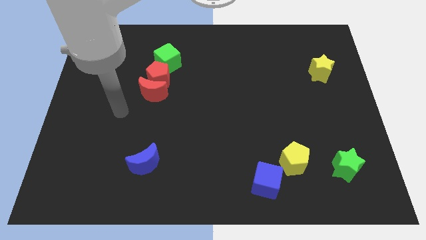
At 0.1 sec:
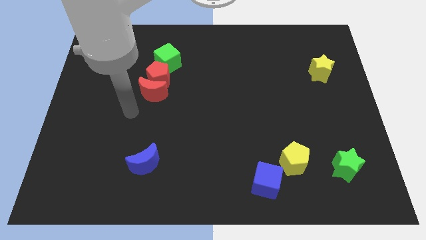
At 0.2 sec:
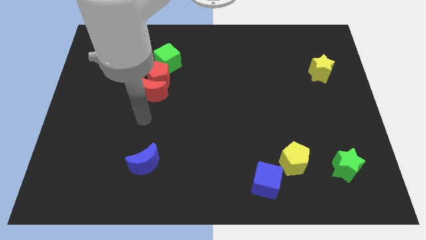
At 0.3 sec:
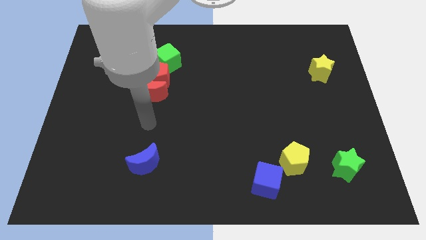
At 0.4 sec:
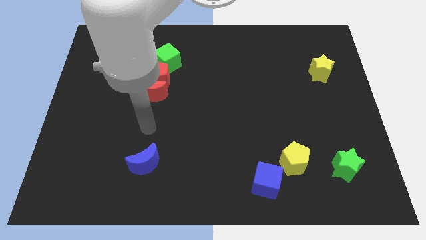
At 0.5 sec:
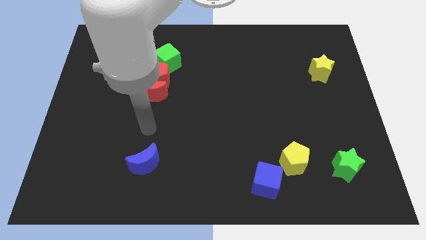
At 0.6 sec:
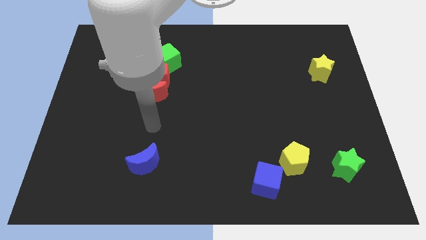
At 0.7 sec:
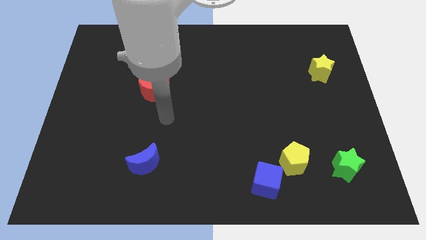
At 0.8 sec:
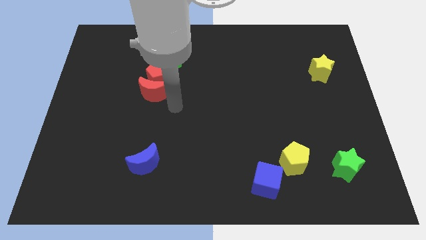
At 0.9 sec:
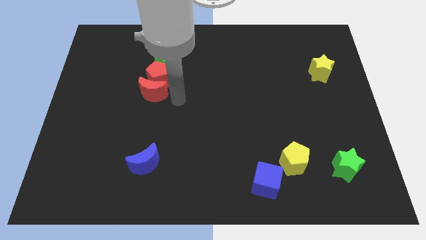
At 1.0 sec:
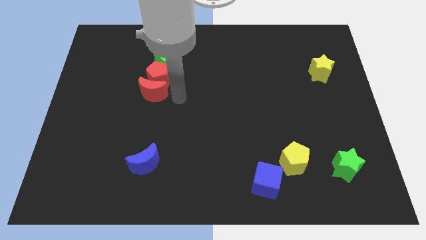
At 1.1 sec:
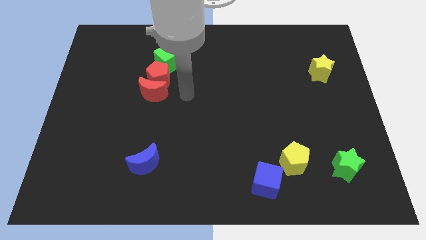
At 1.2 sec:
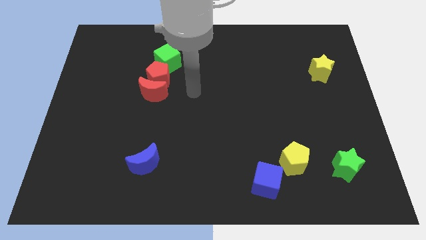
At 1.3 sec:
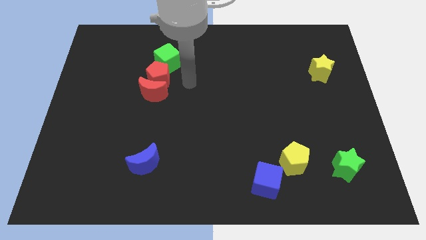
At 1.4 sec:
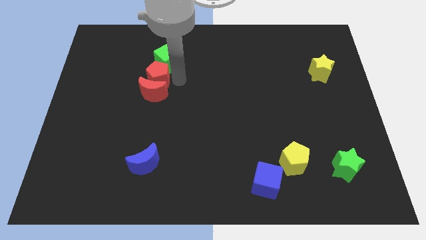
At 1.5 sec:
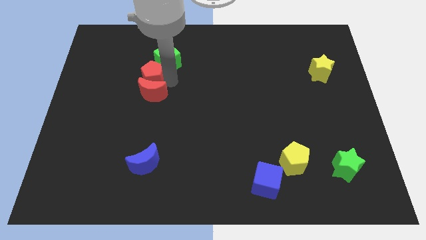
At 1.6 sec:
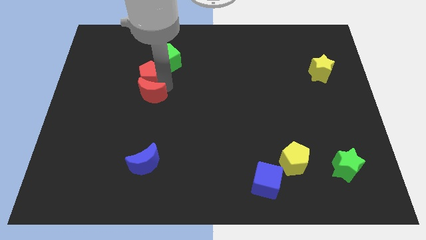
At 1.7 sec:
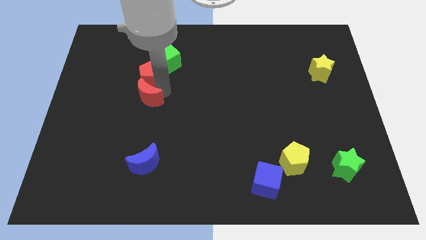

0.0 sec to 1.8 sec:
touch the red pentagon

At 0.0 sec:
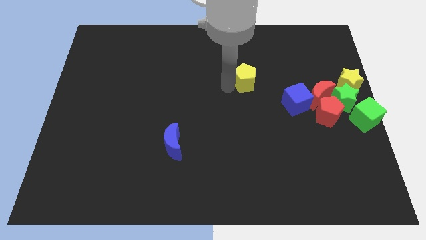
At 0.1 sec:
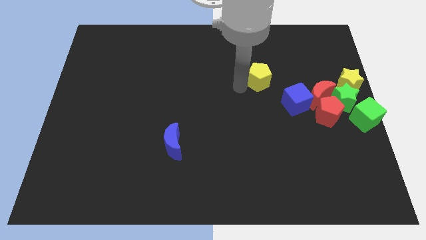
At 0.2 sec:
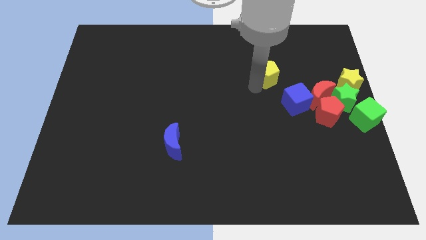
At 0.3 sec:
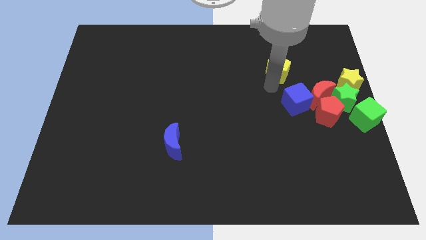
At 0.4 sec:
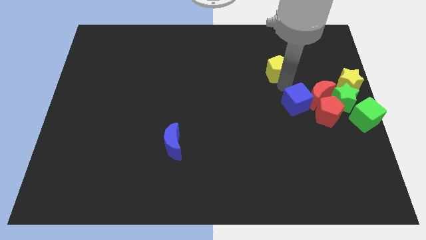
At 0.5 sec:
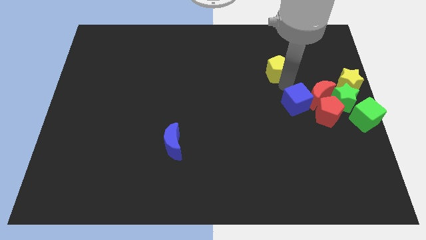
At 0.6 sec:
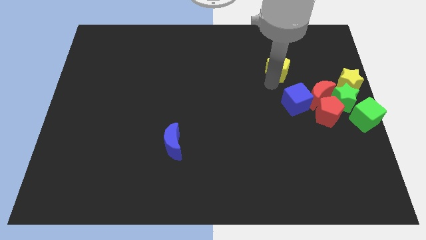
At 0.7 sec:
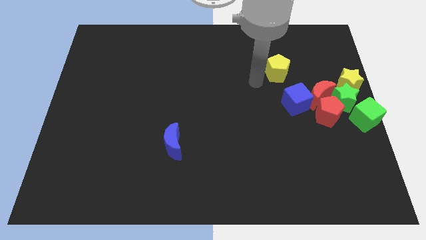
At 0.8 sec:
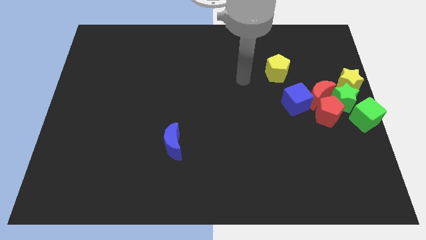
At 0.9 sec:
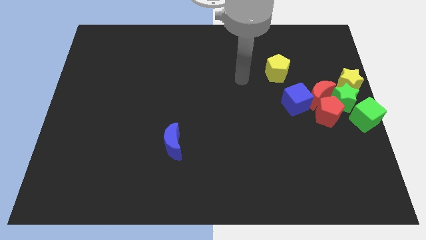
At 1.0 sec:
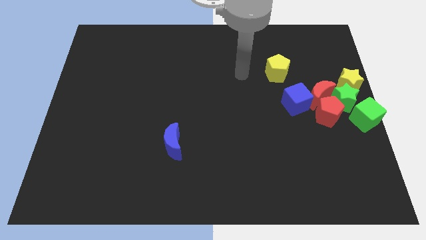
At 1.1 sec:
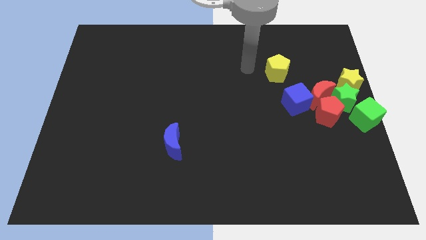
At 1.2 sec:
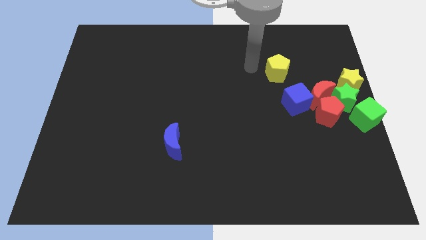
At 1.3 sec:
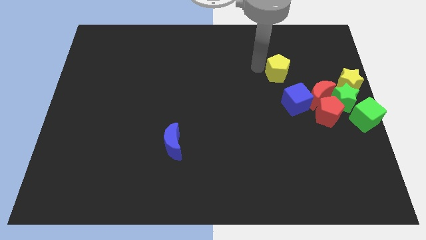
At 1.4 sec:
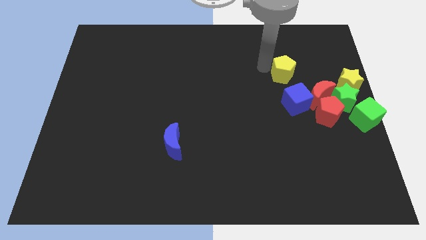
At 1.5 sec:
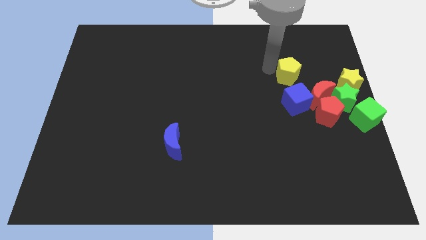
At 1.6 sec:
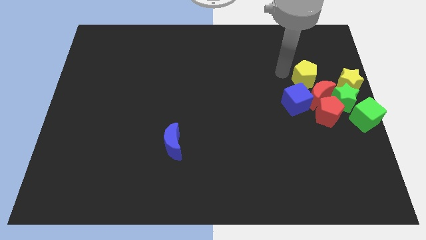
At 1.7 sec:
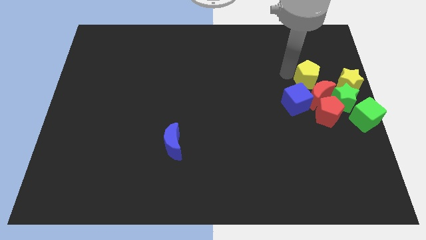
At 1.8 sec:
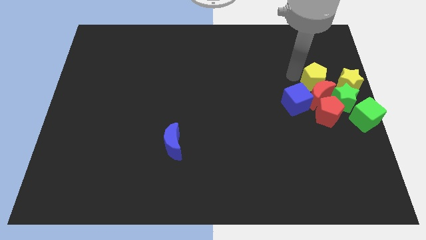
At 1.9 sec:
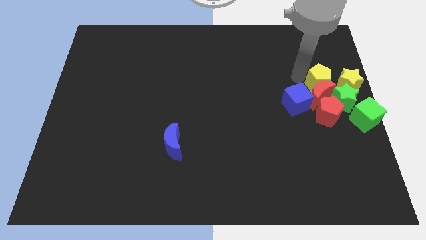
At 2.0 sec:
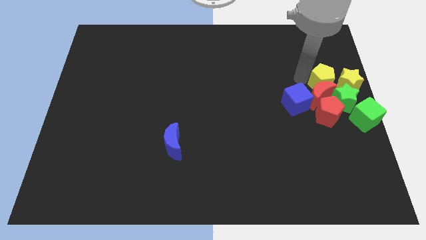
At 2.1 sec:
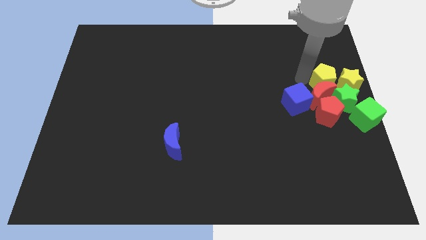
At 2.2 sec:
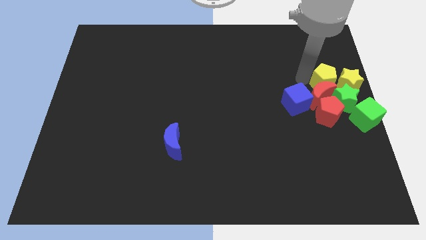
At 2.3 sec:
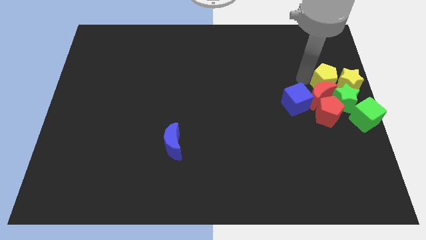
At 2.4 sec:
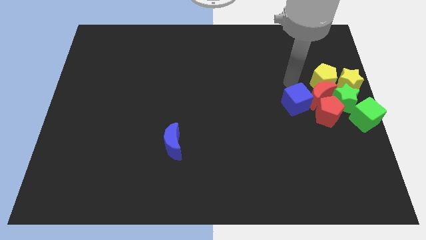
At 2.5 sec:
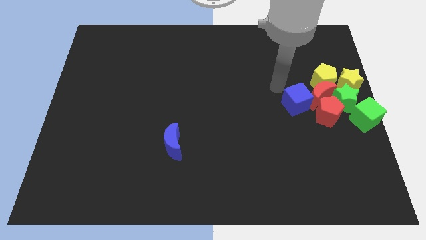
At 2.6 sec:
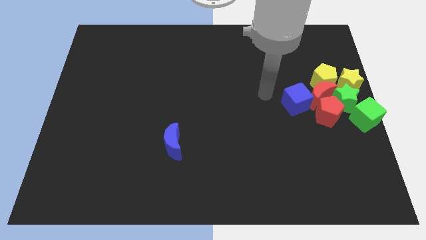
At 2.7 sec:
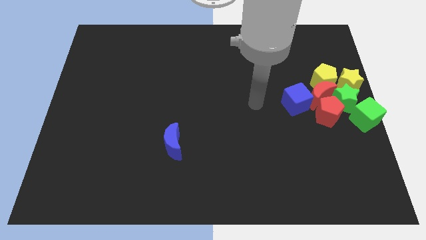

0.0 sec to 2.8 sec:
push the yellow pentagon above the red moon

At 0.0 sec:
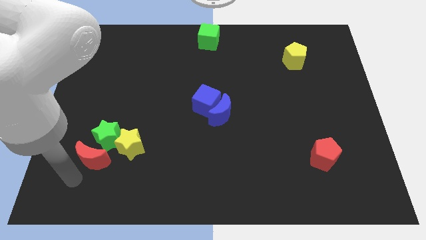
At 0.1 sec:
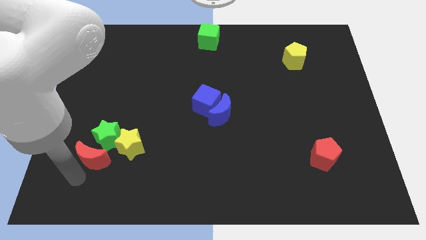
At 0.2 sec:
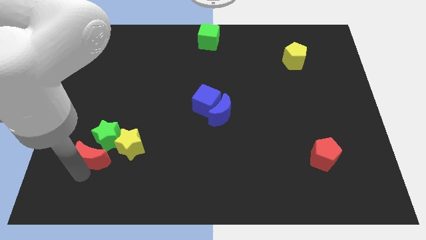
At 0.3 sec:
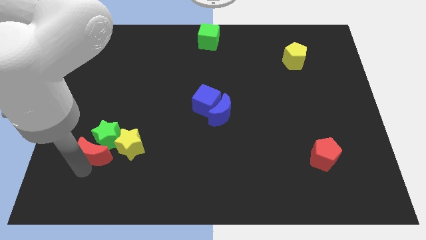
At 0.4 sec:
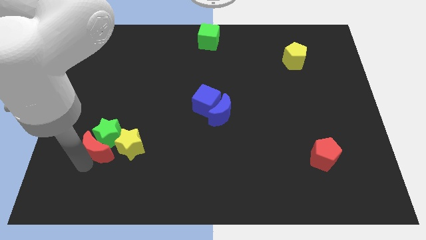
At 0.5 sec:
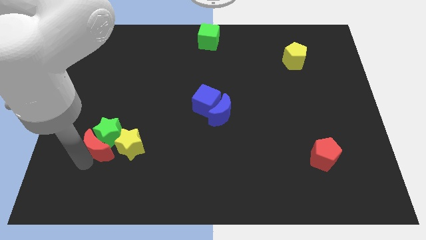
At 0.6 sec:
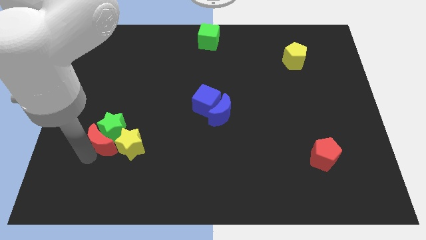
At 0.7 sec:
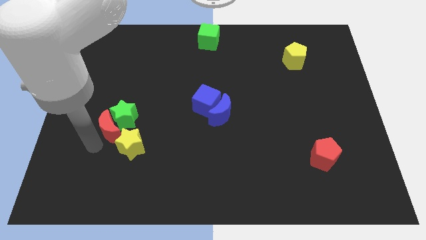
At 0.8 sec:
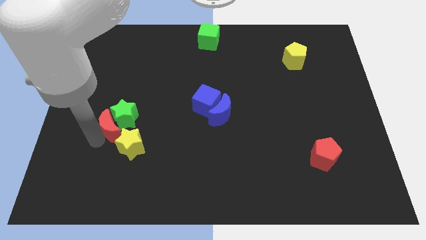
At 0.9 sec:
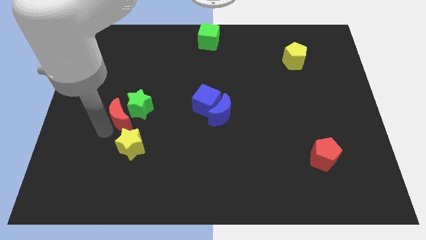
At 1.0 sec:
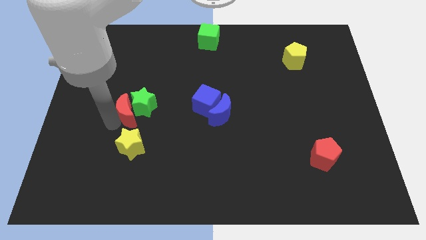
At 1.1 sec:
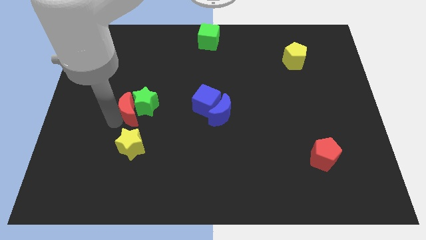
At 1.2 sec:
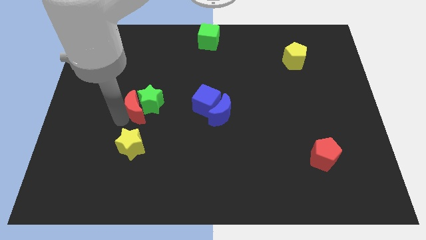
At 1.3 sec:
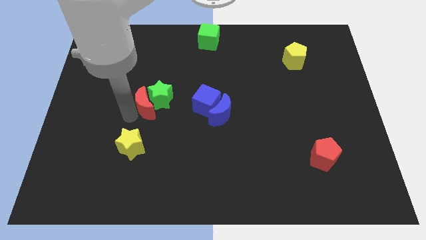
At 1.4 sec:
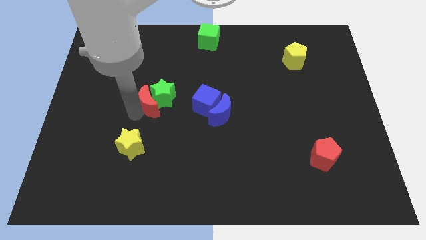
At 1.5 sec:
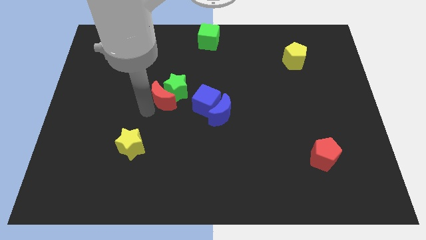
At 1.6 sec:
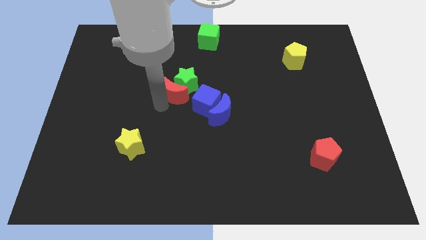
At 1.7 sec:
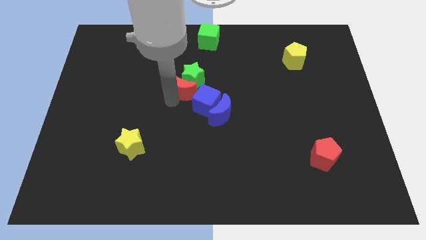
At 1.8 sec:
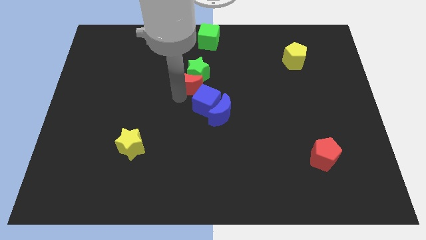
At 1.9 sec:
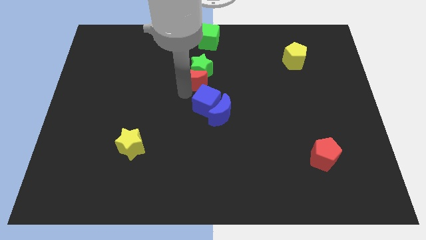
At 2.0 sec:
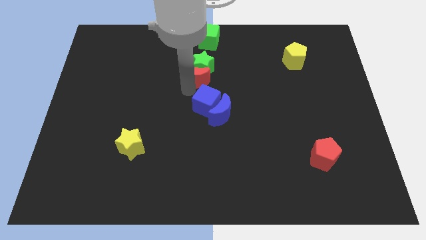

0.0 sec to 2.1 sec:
move the red crescent in to green star

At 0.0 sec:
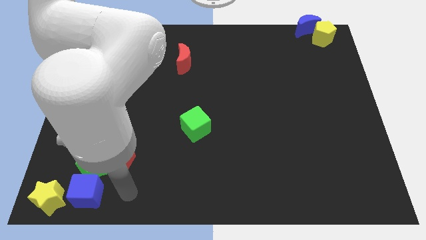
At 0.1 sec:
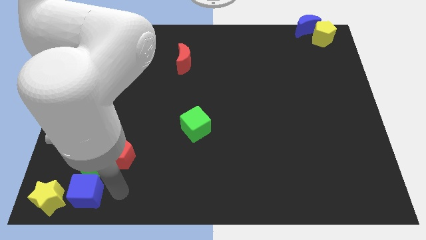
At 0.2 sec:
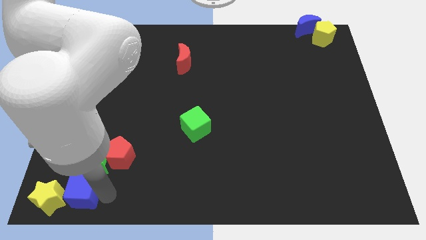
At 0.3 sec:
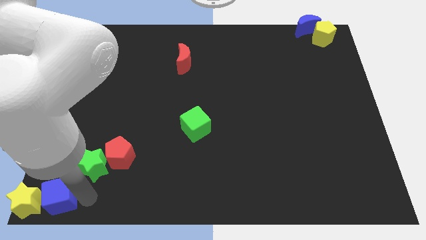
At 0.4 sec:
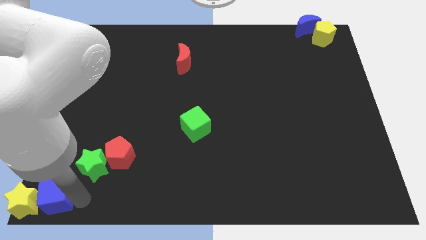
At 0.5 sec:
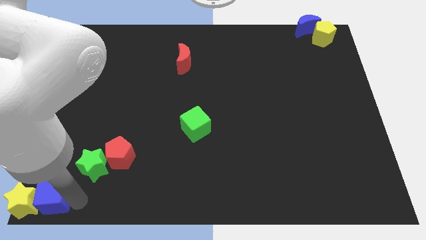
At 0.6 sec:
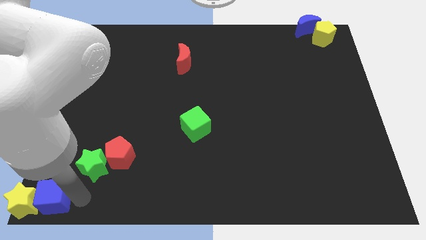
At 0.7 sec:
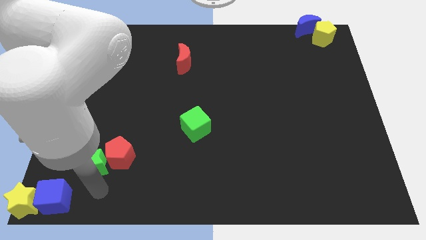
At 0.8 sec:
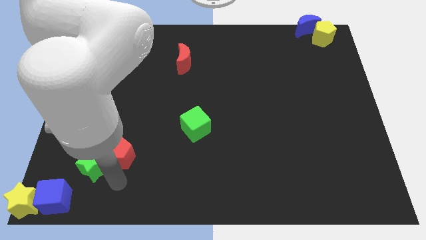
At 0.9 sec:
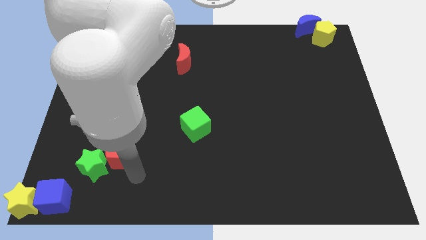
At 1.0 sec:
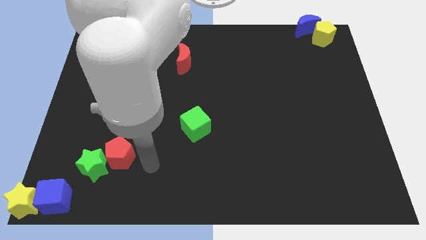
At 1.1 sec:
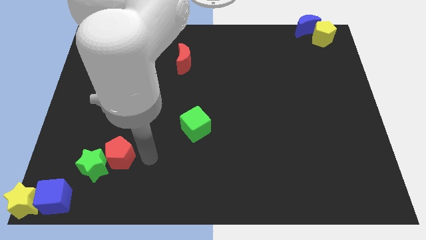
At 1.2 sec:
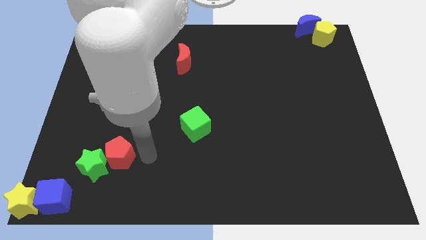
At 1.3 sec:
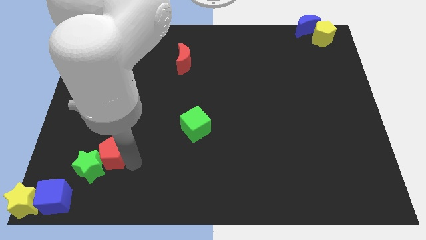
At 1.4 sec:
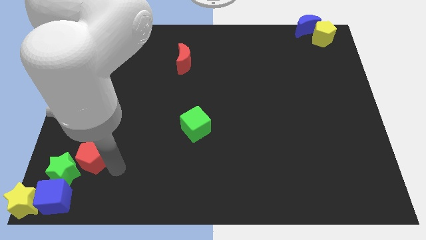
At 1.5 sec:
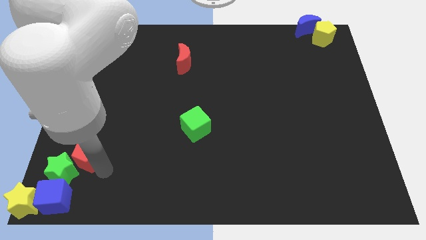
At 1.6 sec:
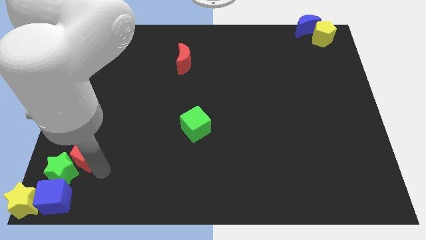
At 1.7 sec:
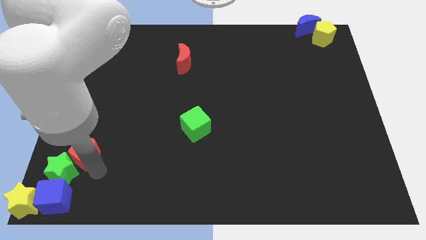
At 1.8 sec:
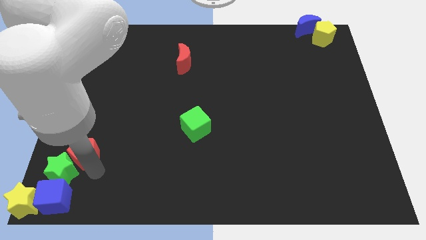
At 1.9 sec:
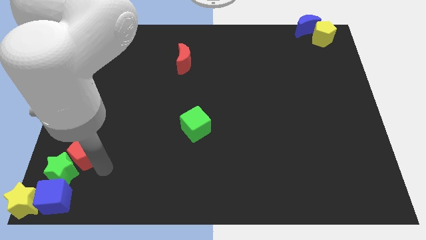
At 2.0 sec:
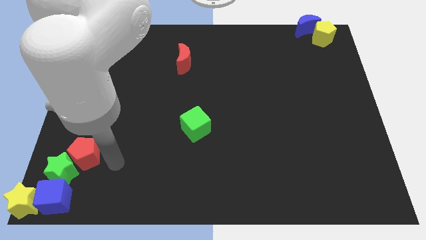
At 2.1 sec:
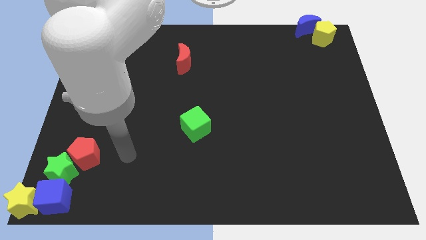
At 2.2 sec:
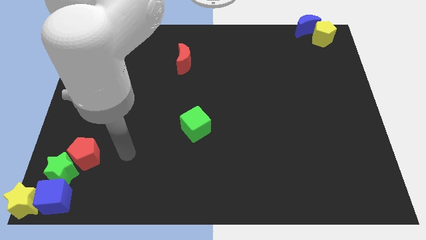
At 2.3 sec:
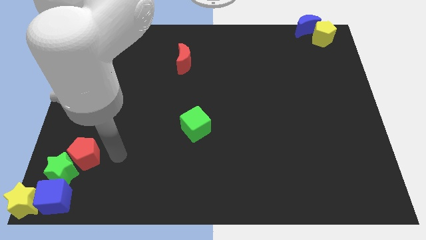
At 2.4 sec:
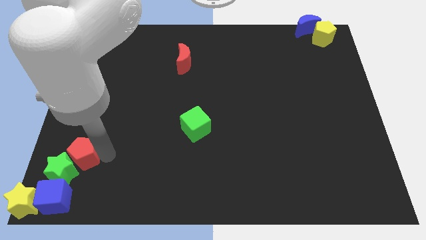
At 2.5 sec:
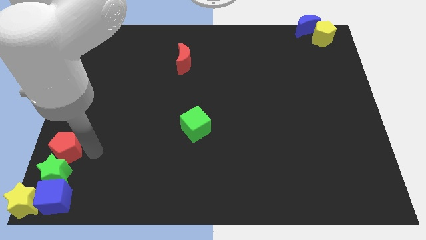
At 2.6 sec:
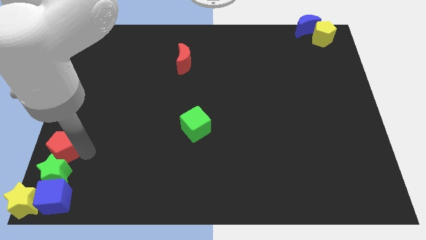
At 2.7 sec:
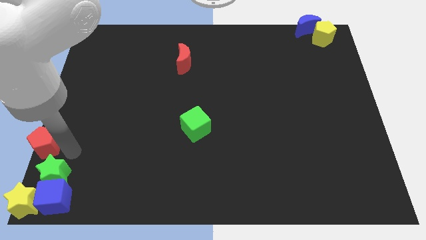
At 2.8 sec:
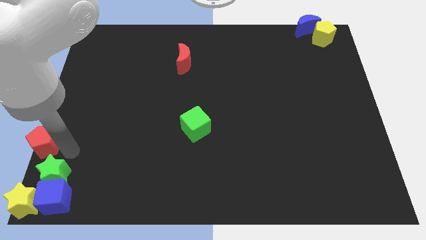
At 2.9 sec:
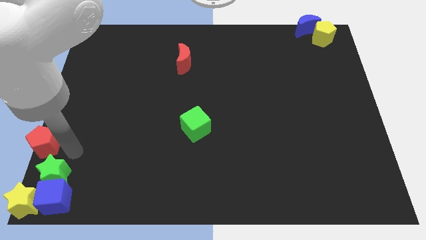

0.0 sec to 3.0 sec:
move green star and red pentagon to left of the board
